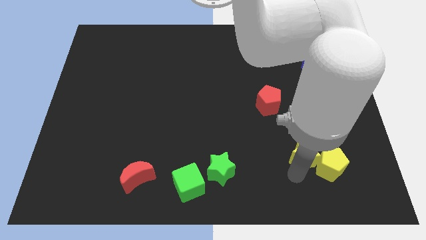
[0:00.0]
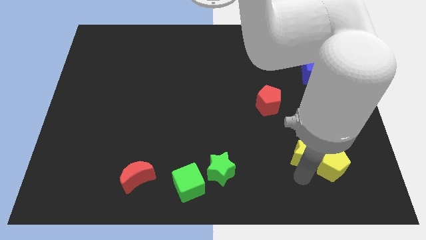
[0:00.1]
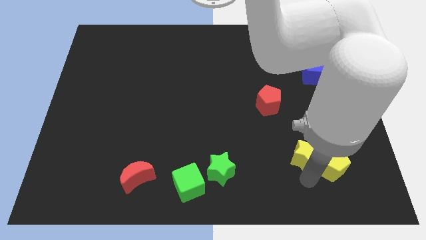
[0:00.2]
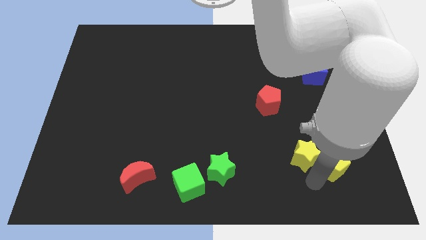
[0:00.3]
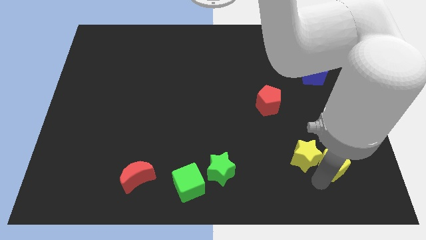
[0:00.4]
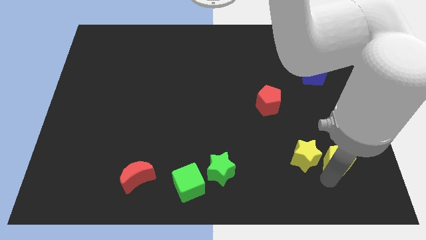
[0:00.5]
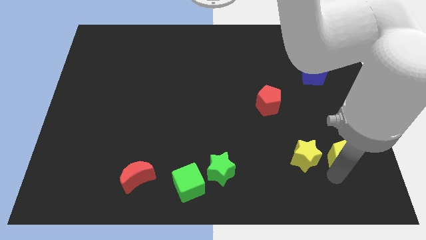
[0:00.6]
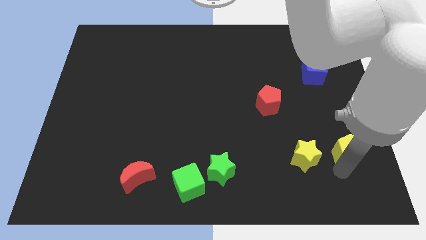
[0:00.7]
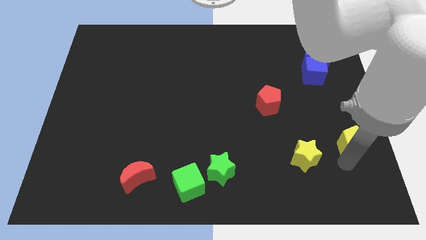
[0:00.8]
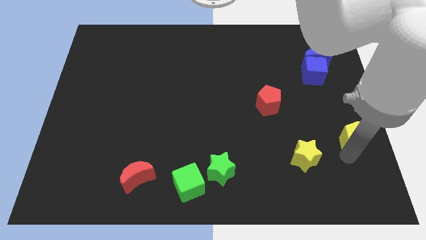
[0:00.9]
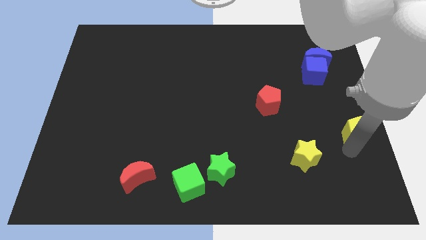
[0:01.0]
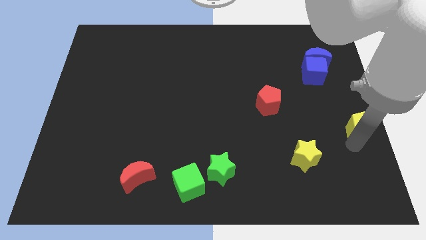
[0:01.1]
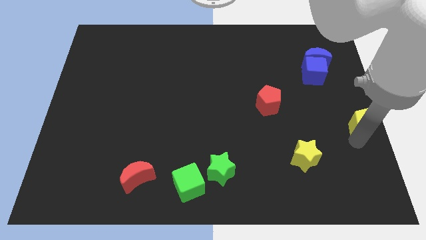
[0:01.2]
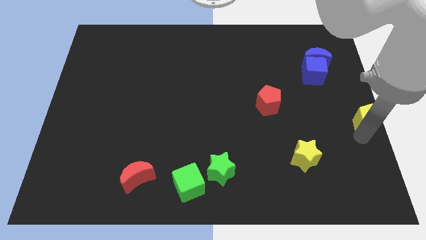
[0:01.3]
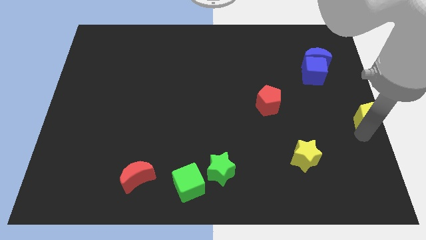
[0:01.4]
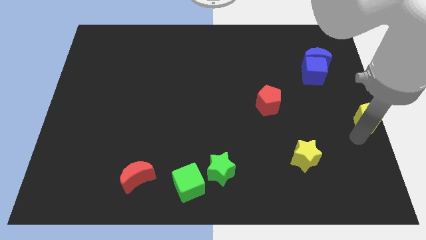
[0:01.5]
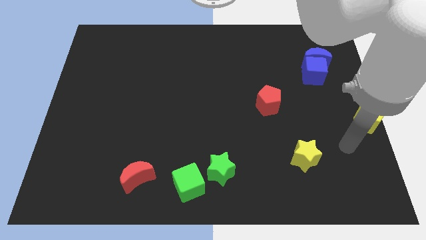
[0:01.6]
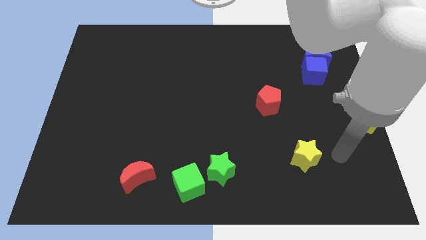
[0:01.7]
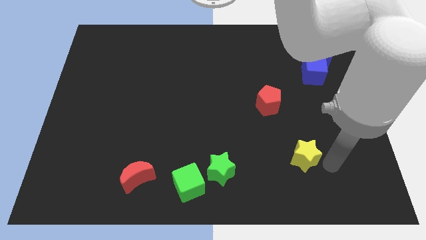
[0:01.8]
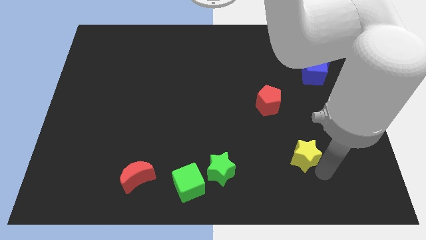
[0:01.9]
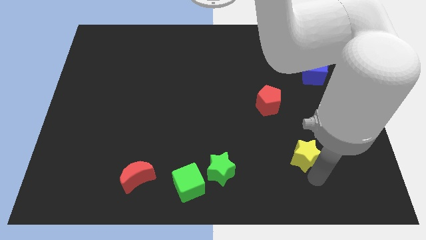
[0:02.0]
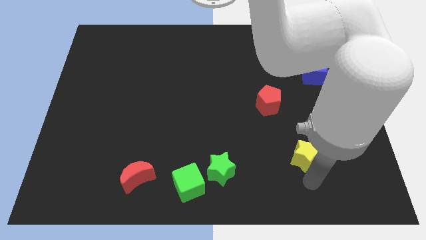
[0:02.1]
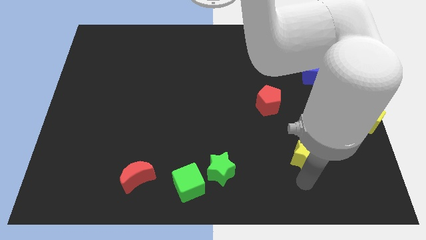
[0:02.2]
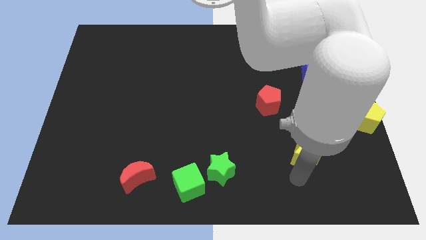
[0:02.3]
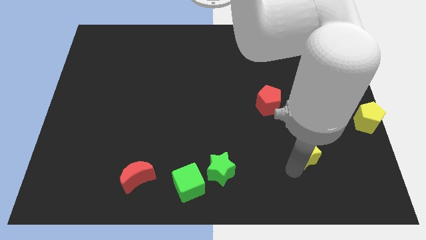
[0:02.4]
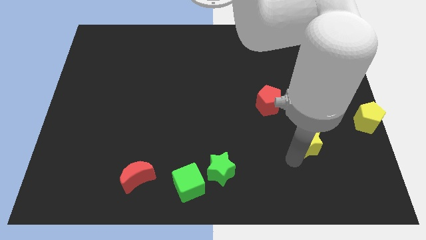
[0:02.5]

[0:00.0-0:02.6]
separate the yellow pentagon from the yellow star

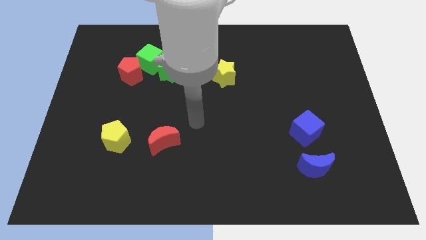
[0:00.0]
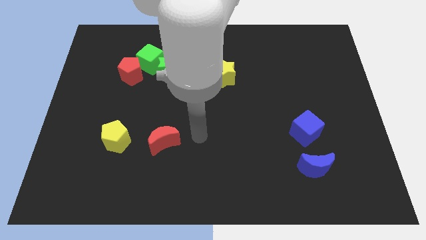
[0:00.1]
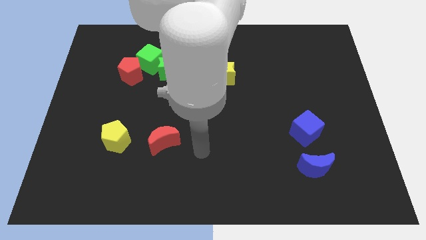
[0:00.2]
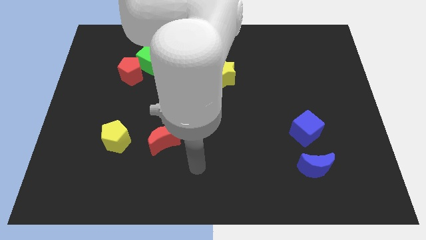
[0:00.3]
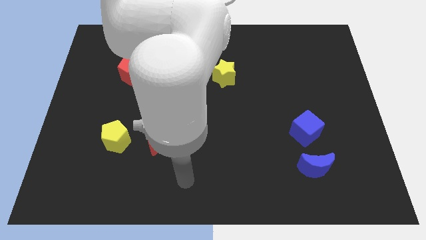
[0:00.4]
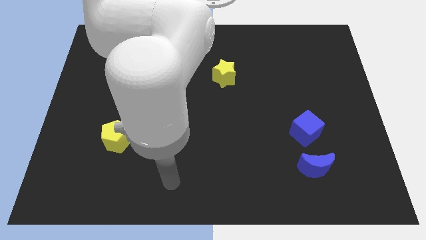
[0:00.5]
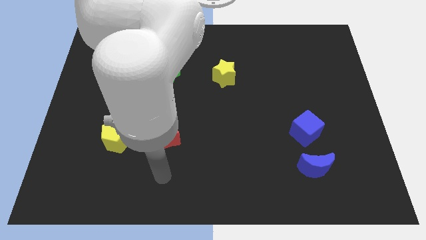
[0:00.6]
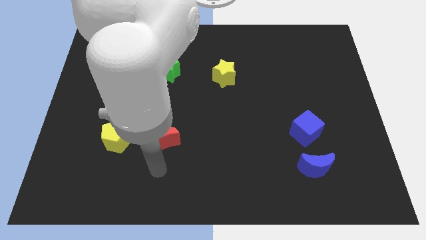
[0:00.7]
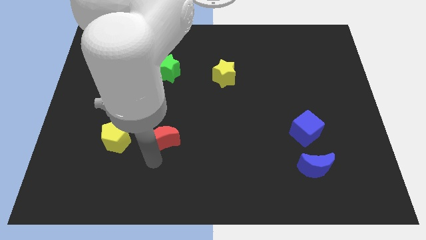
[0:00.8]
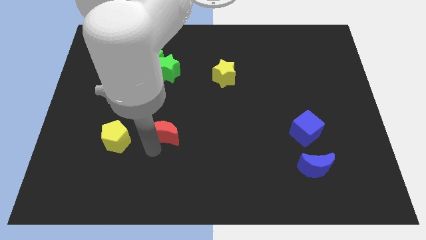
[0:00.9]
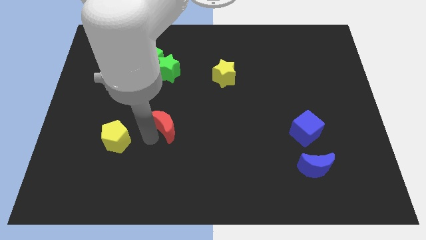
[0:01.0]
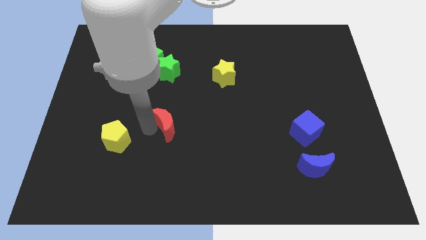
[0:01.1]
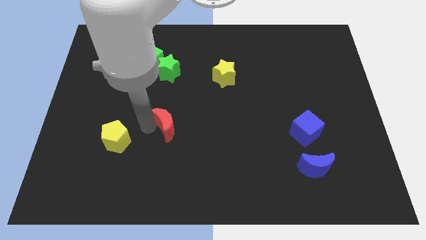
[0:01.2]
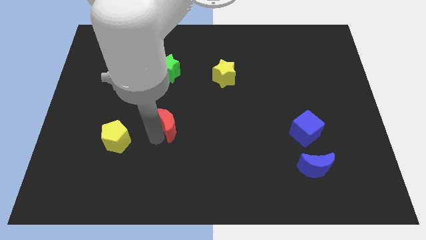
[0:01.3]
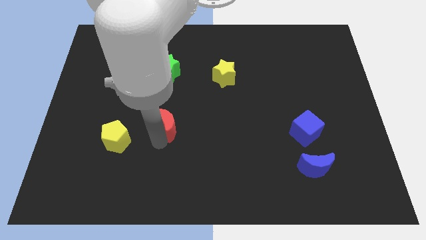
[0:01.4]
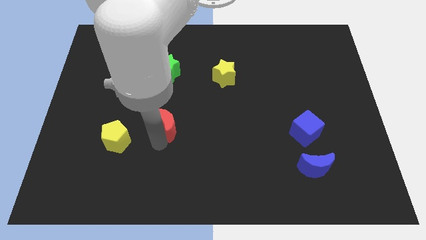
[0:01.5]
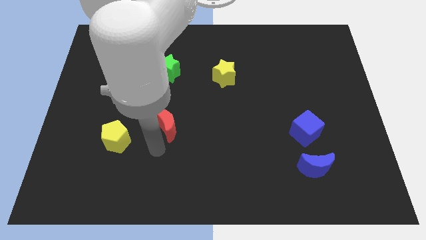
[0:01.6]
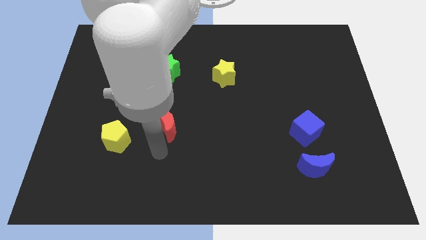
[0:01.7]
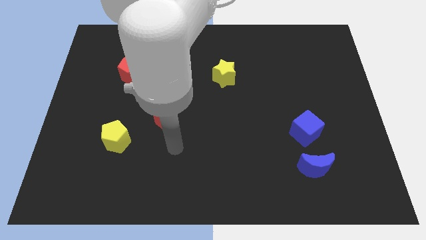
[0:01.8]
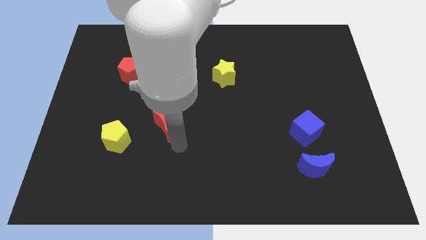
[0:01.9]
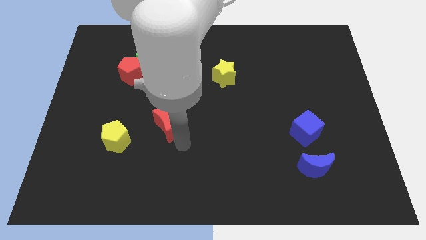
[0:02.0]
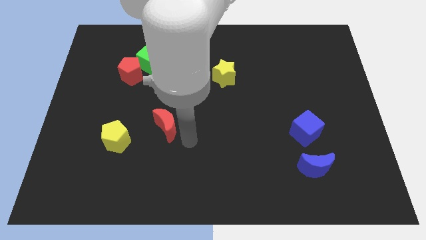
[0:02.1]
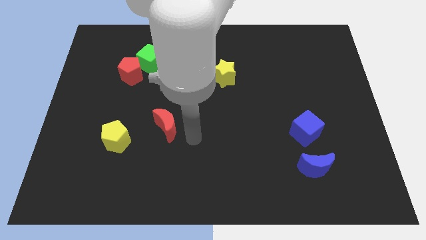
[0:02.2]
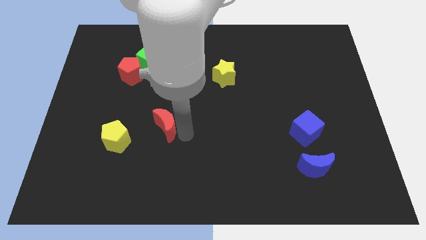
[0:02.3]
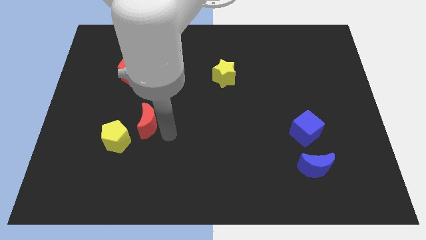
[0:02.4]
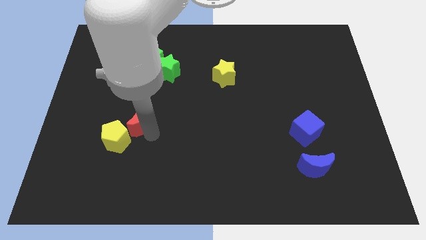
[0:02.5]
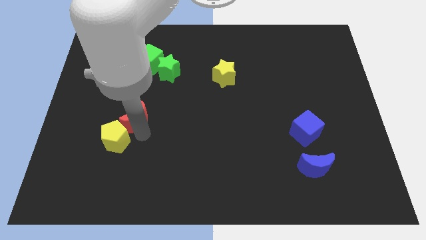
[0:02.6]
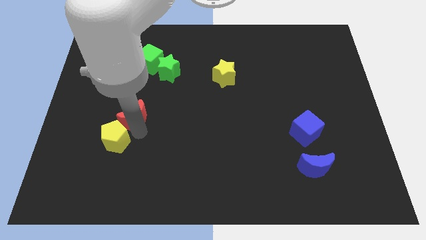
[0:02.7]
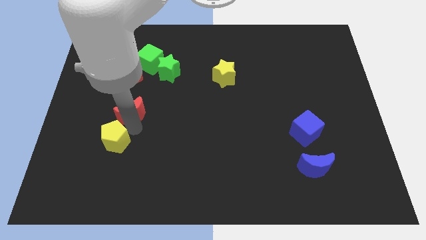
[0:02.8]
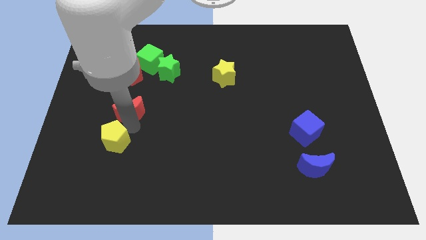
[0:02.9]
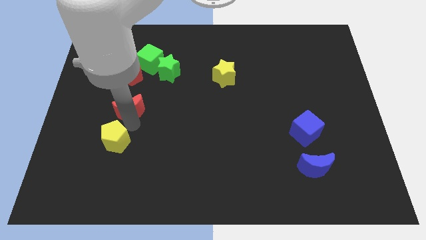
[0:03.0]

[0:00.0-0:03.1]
move the red crescent to the top of the yellow pentagon

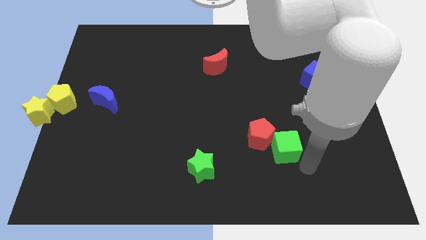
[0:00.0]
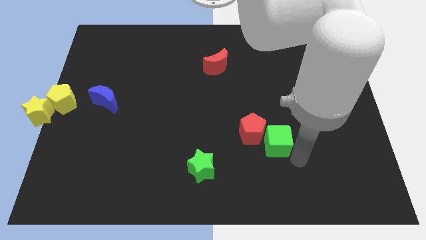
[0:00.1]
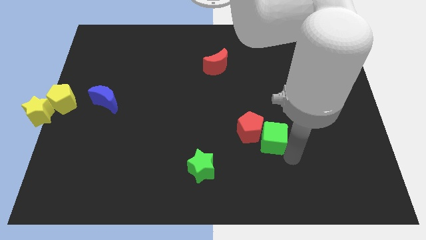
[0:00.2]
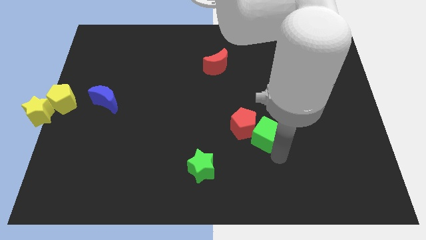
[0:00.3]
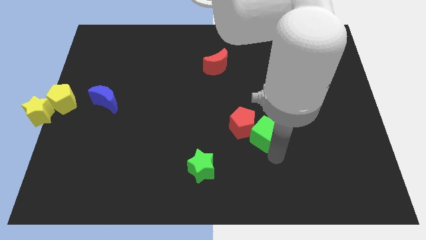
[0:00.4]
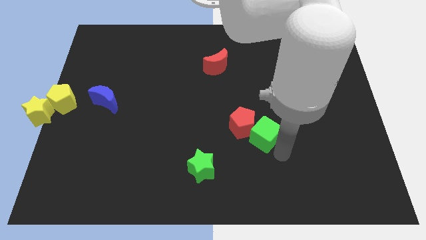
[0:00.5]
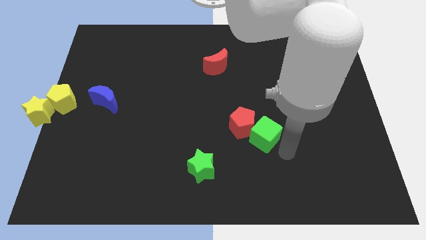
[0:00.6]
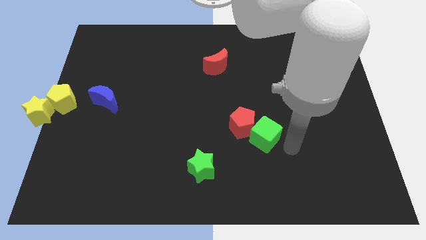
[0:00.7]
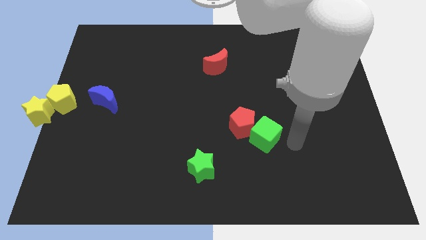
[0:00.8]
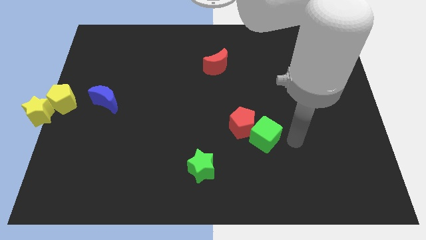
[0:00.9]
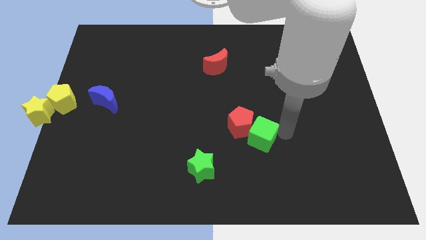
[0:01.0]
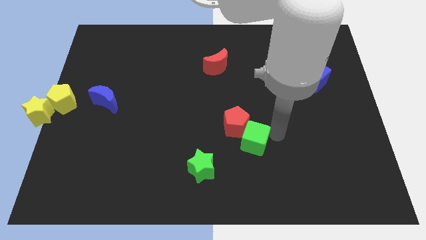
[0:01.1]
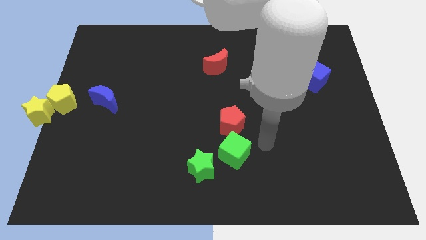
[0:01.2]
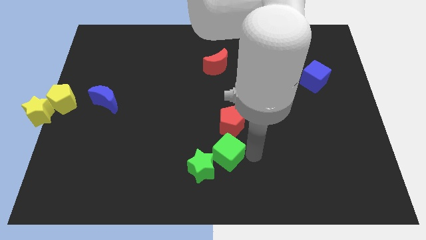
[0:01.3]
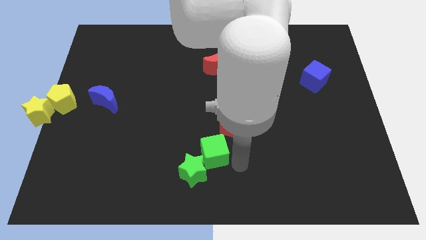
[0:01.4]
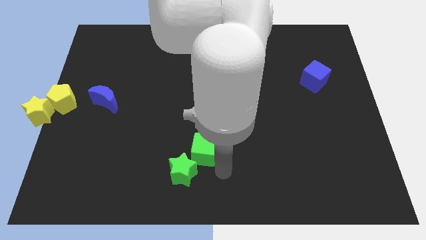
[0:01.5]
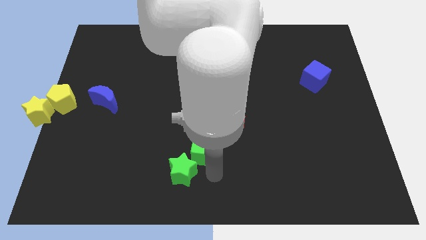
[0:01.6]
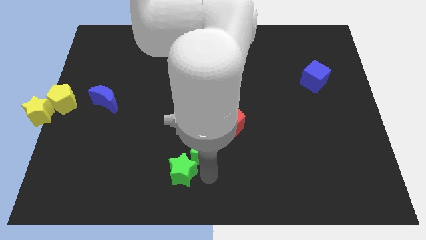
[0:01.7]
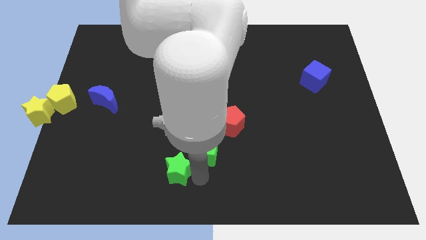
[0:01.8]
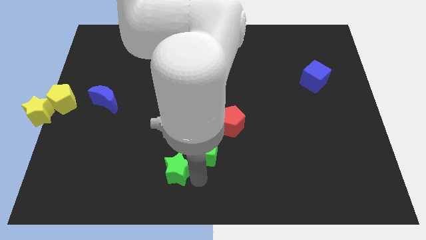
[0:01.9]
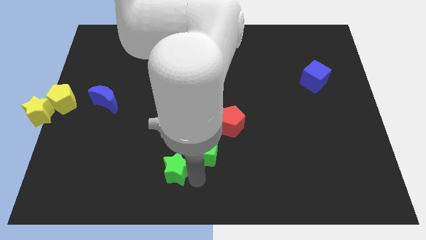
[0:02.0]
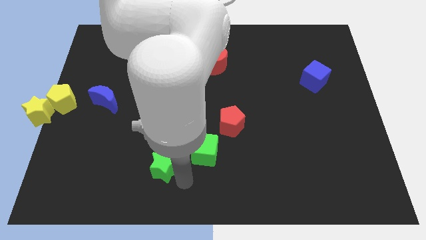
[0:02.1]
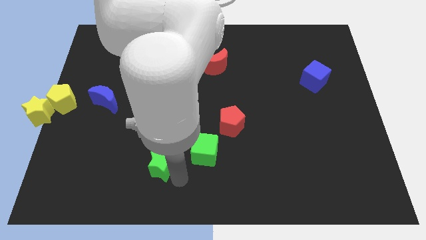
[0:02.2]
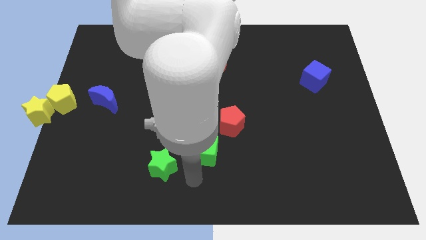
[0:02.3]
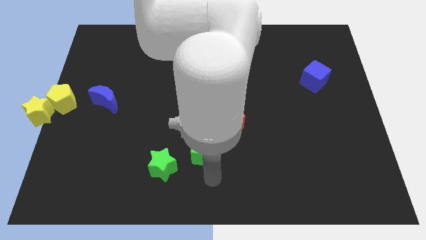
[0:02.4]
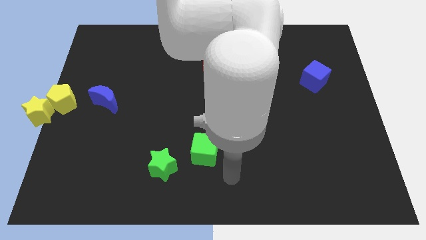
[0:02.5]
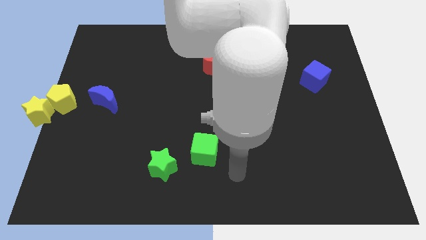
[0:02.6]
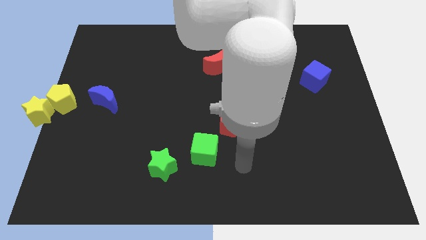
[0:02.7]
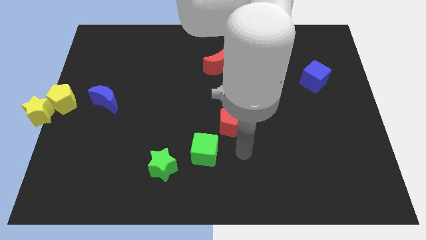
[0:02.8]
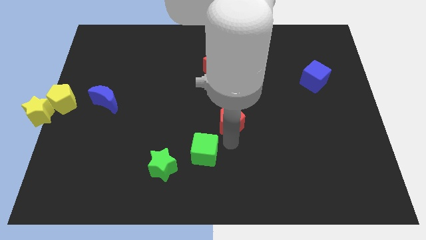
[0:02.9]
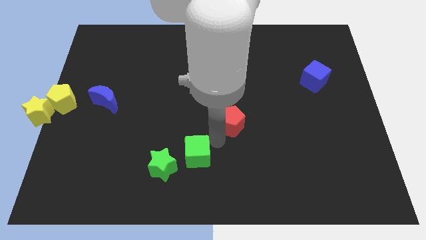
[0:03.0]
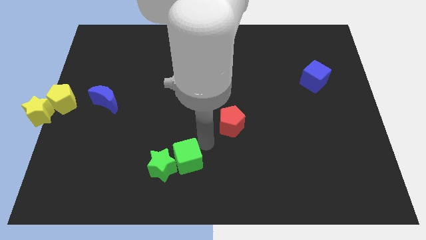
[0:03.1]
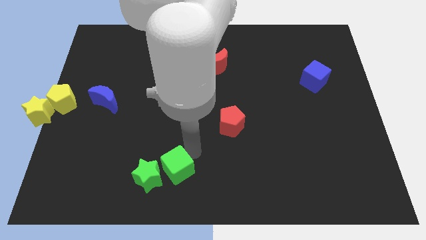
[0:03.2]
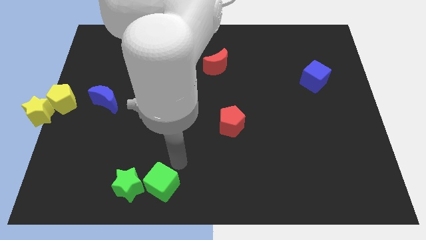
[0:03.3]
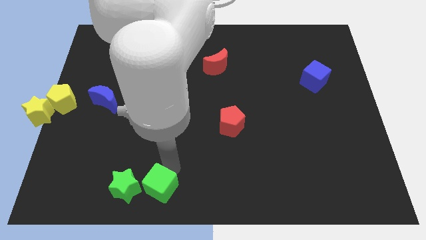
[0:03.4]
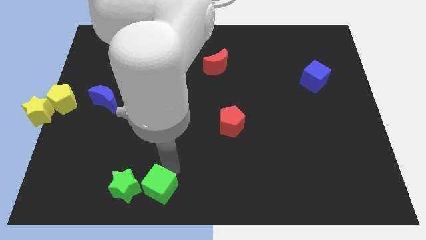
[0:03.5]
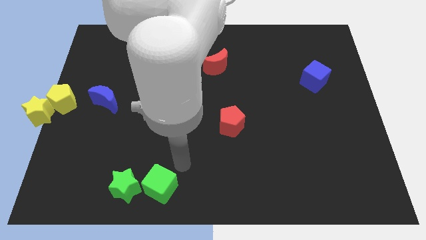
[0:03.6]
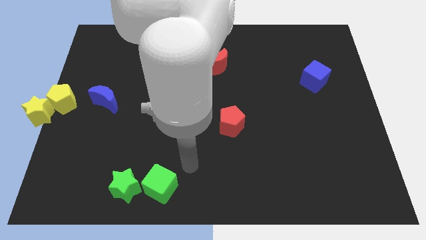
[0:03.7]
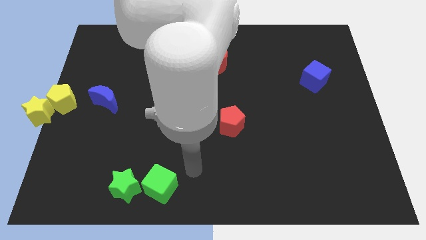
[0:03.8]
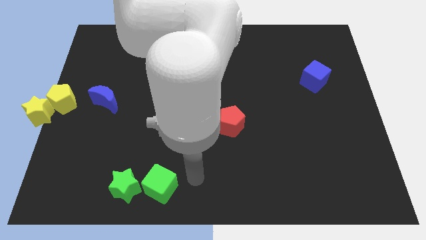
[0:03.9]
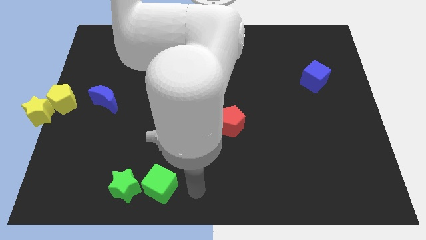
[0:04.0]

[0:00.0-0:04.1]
push the green cube along the green star towards the bottom left to the board
